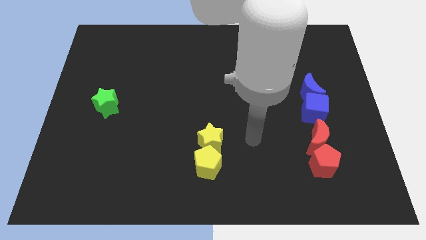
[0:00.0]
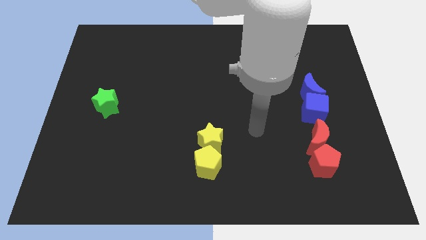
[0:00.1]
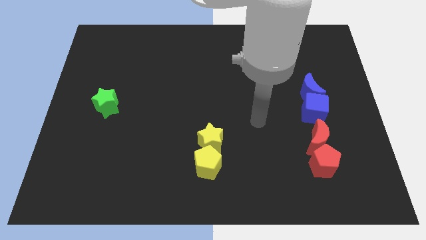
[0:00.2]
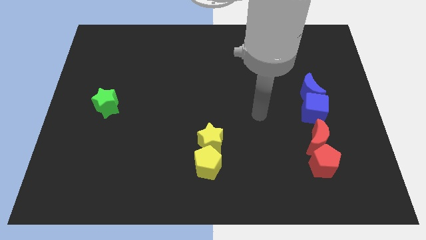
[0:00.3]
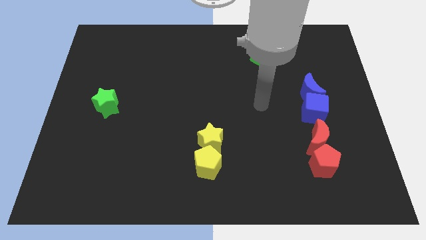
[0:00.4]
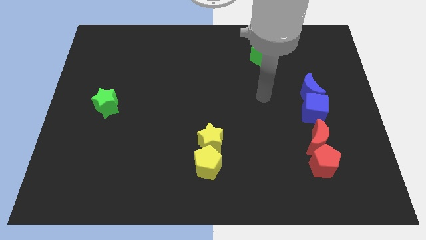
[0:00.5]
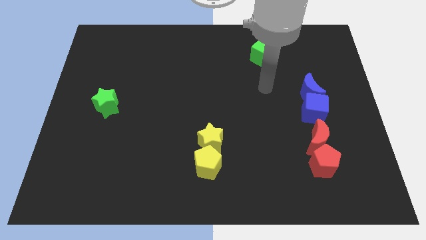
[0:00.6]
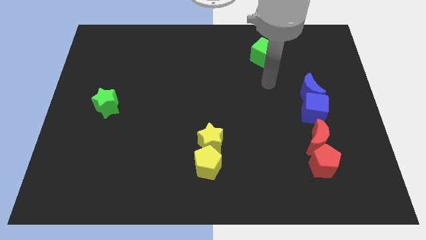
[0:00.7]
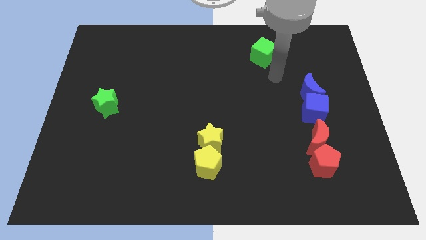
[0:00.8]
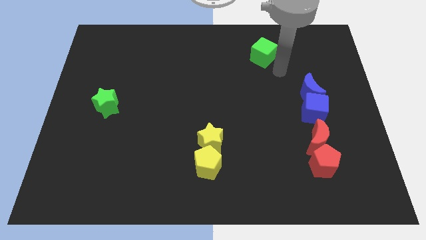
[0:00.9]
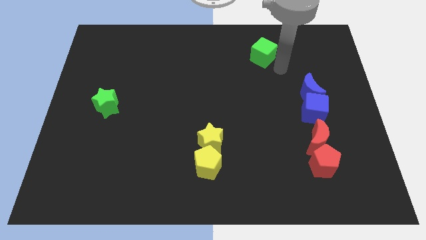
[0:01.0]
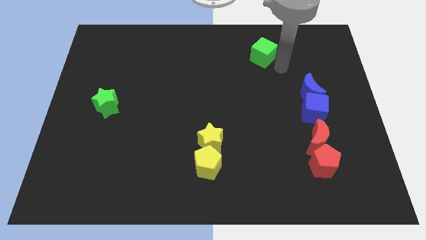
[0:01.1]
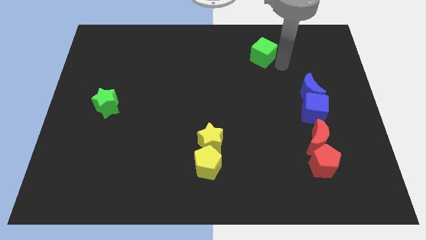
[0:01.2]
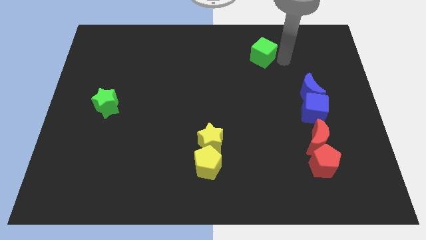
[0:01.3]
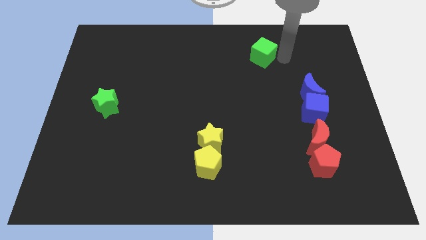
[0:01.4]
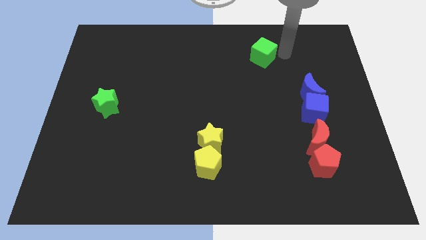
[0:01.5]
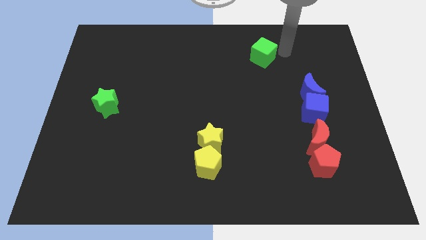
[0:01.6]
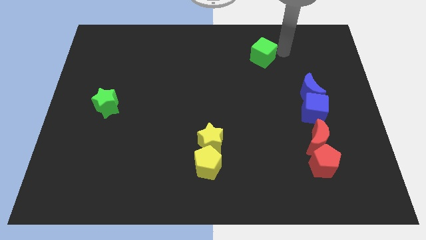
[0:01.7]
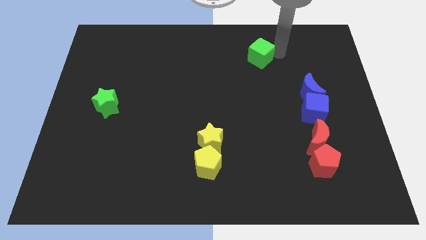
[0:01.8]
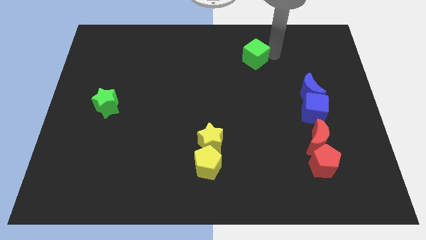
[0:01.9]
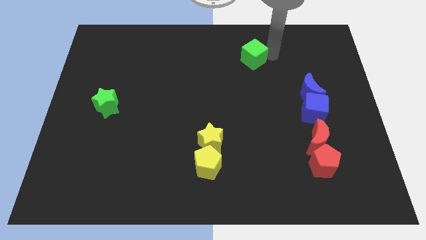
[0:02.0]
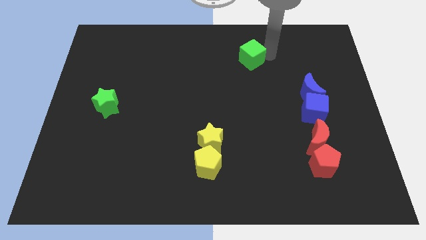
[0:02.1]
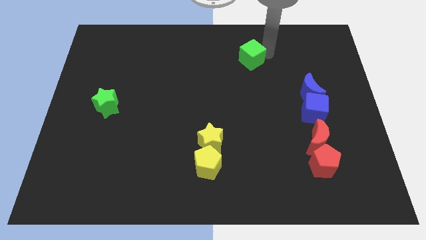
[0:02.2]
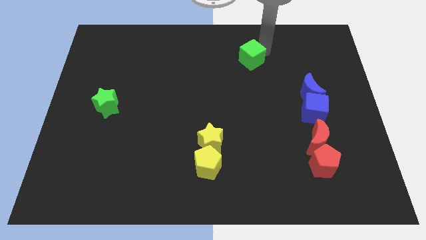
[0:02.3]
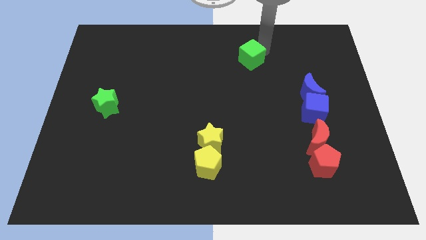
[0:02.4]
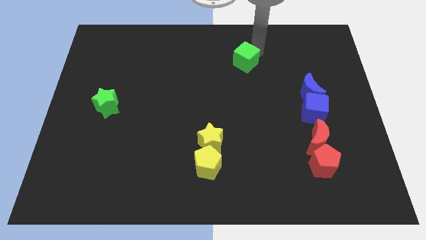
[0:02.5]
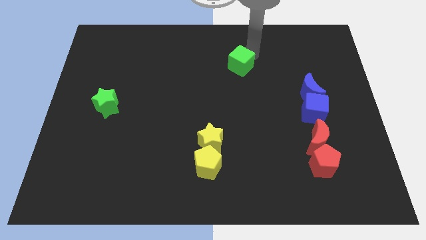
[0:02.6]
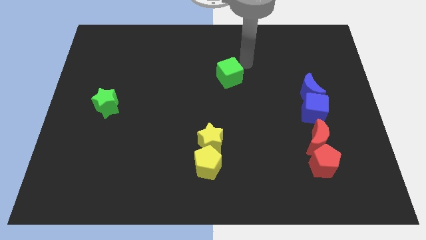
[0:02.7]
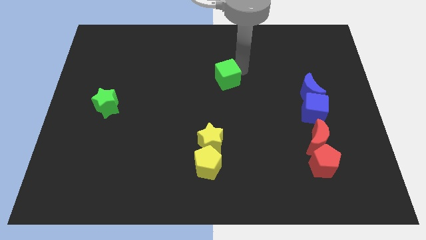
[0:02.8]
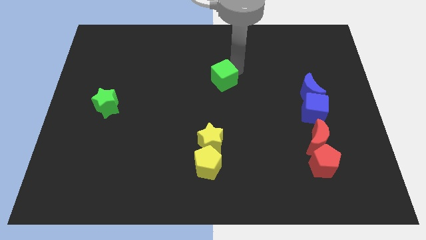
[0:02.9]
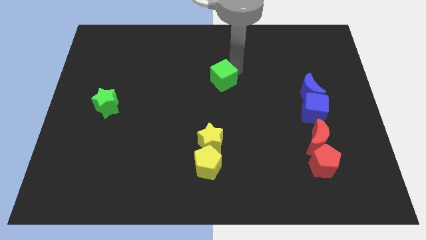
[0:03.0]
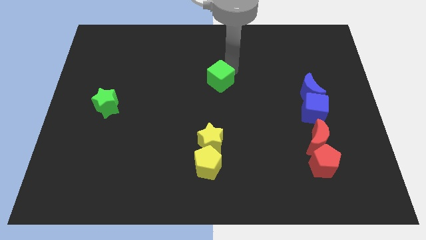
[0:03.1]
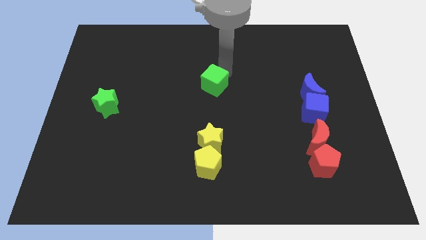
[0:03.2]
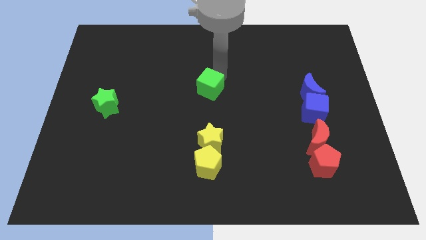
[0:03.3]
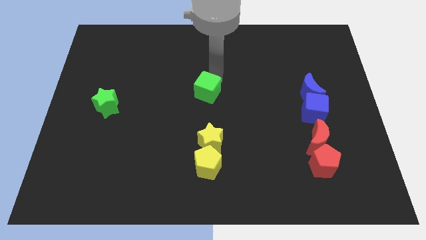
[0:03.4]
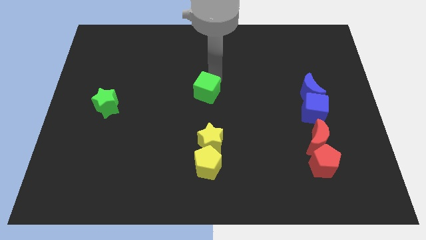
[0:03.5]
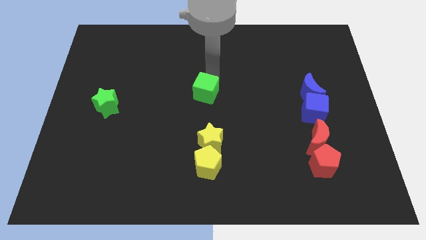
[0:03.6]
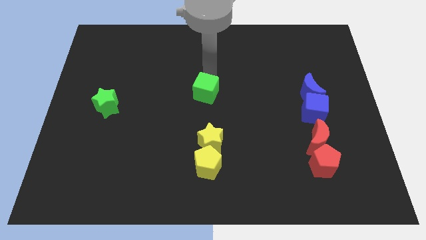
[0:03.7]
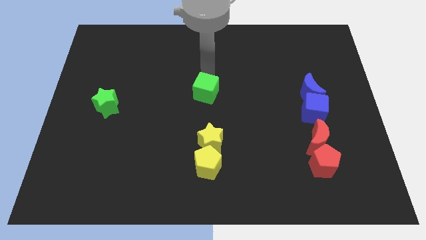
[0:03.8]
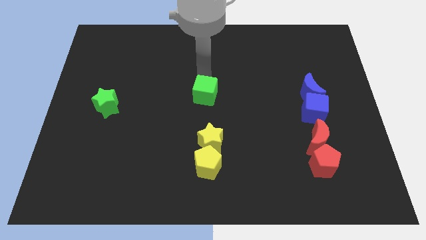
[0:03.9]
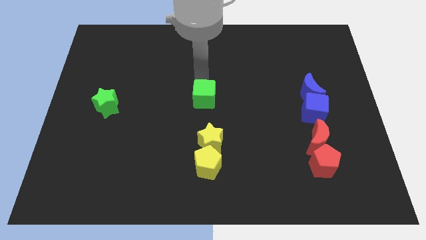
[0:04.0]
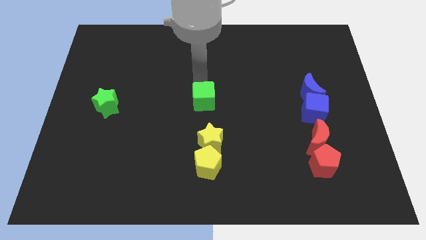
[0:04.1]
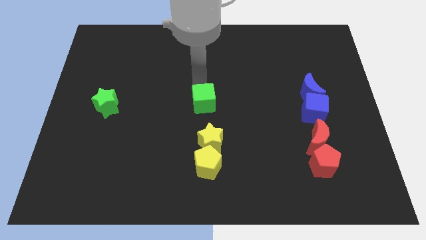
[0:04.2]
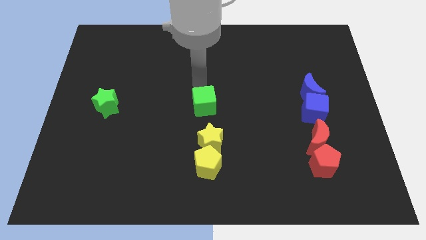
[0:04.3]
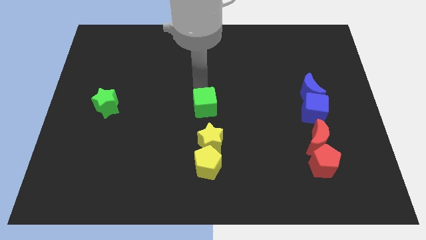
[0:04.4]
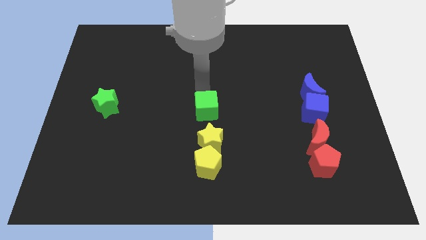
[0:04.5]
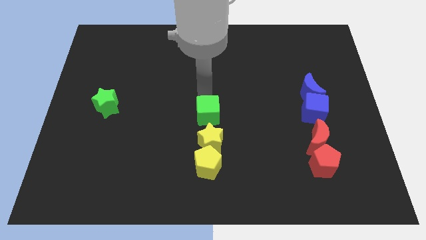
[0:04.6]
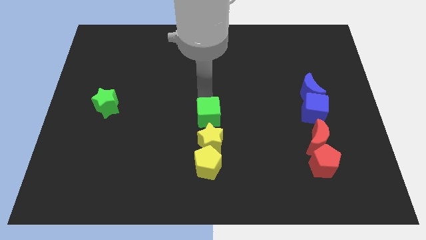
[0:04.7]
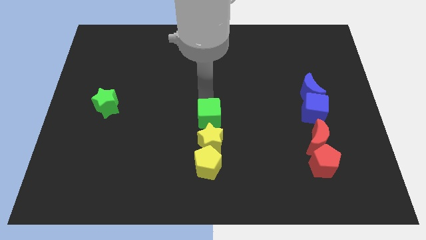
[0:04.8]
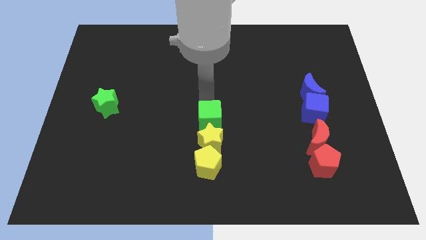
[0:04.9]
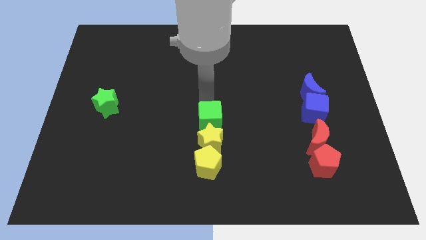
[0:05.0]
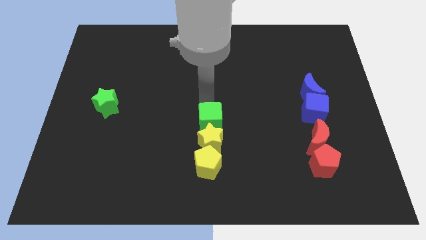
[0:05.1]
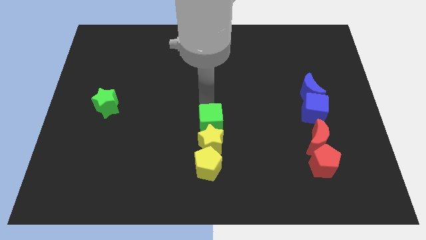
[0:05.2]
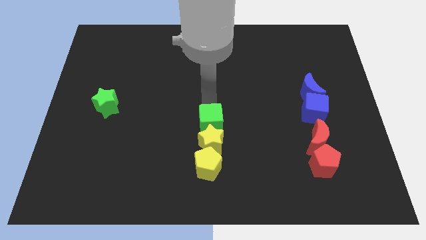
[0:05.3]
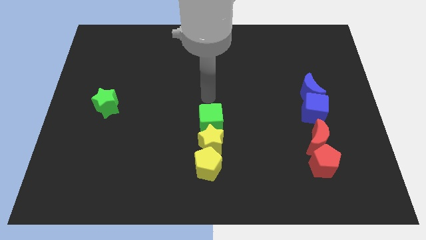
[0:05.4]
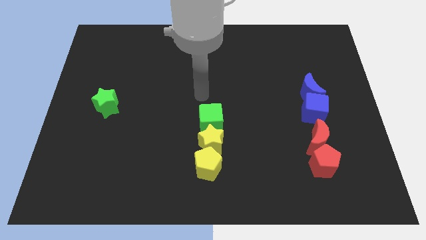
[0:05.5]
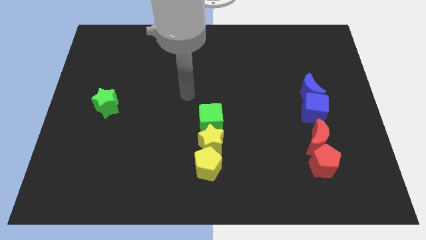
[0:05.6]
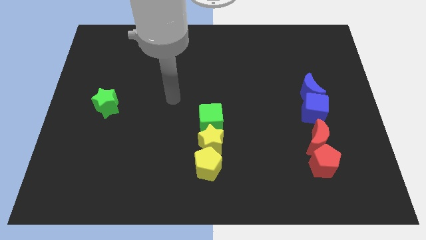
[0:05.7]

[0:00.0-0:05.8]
push the green cube into the yellow star

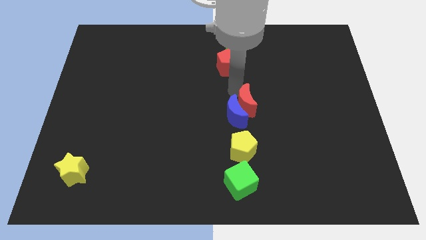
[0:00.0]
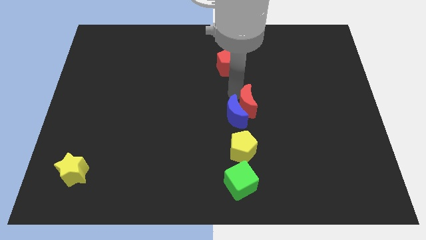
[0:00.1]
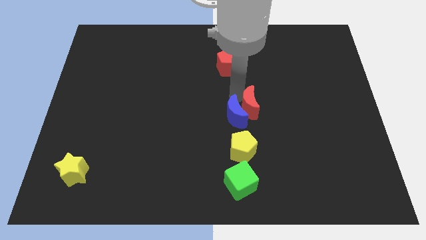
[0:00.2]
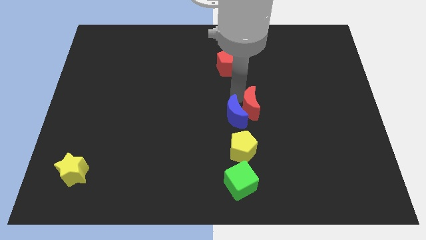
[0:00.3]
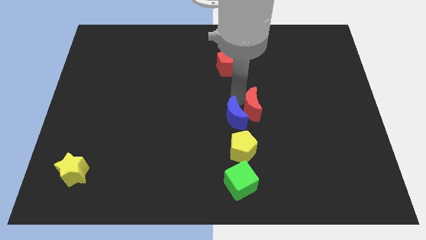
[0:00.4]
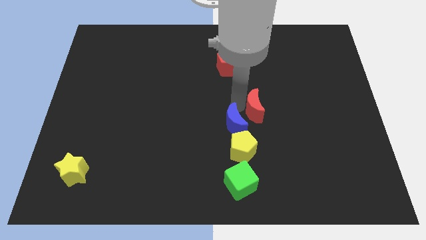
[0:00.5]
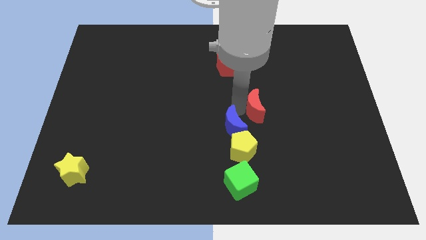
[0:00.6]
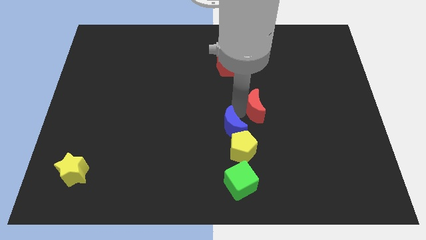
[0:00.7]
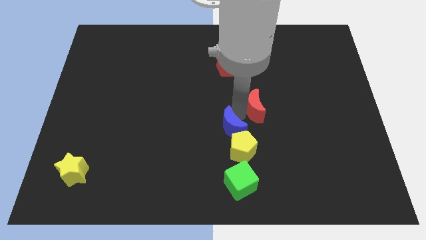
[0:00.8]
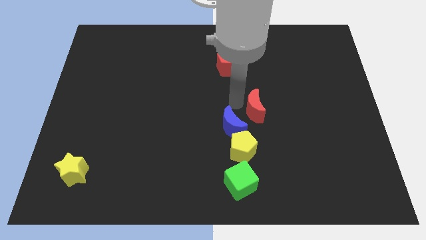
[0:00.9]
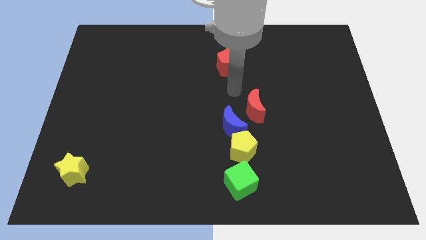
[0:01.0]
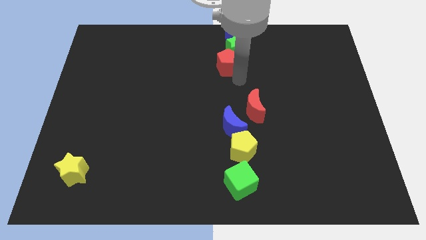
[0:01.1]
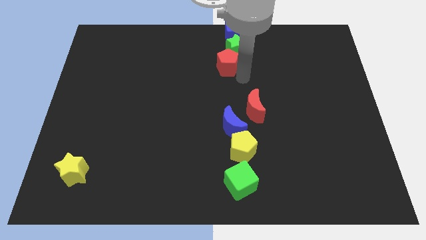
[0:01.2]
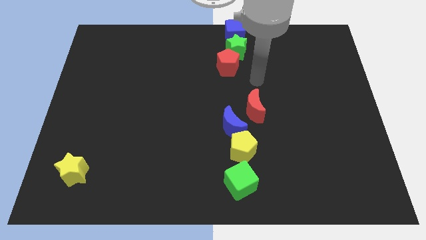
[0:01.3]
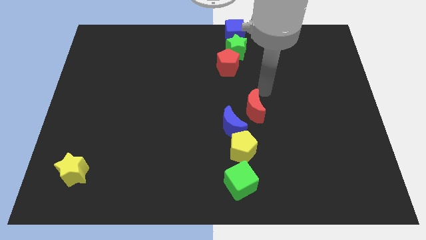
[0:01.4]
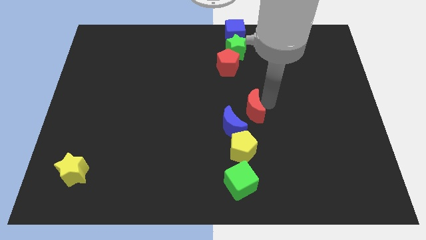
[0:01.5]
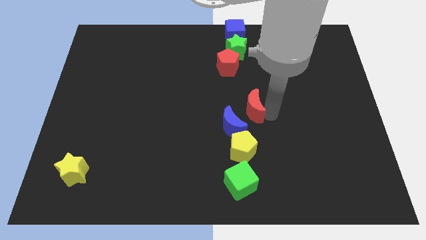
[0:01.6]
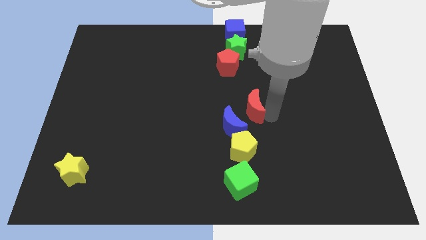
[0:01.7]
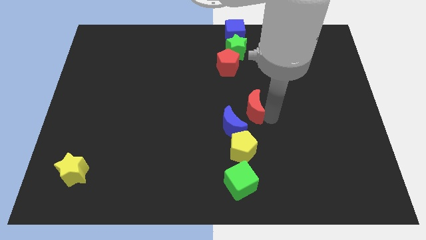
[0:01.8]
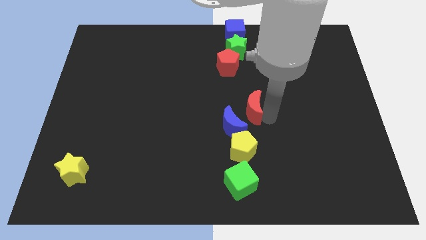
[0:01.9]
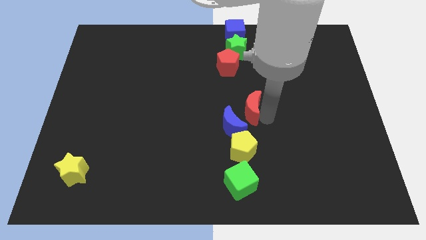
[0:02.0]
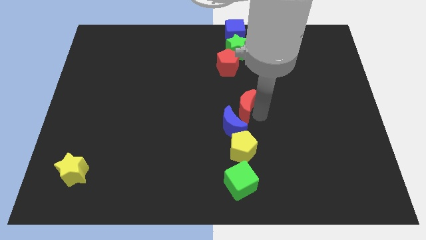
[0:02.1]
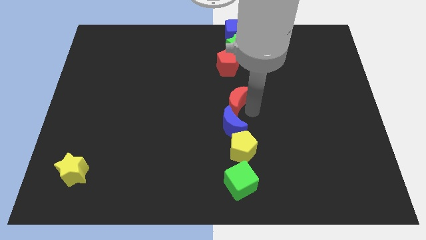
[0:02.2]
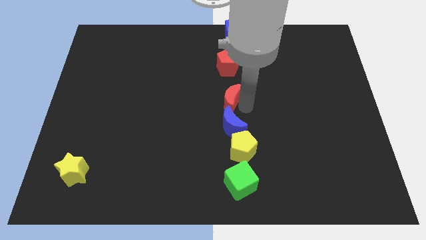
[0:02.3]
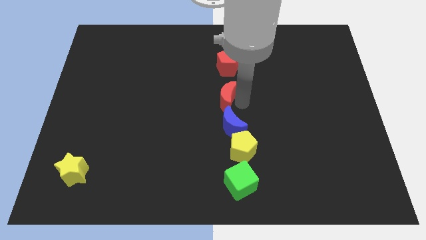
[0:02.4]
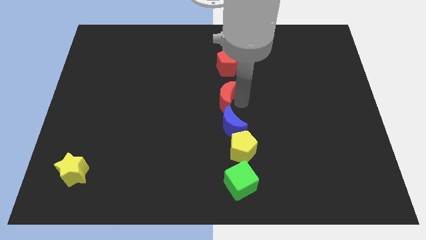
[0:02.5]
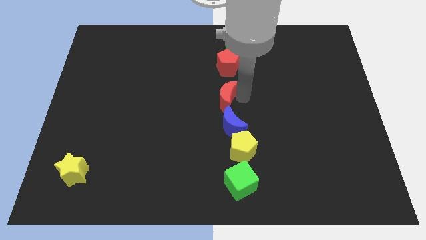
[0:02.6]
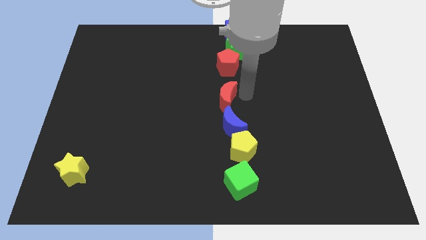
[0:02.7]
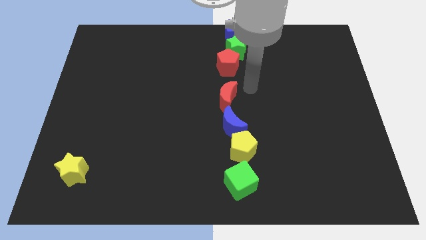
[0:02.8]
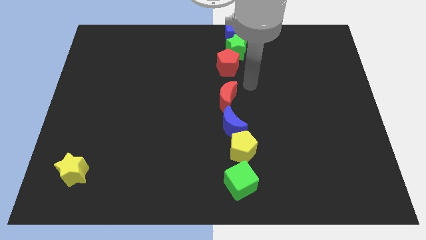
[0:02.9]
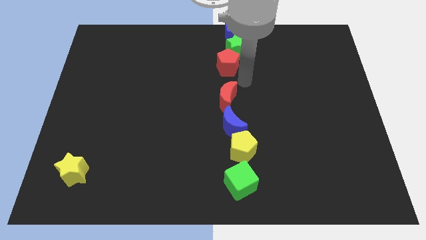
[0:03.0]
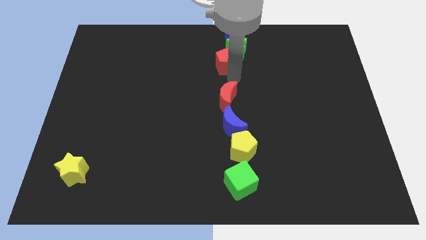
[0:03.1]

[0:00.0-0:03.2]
push the red crescent at the top of the blue crescent
